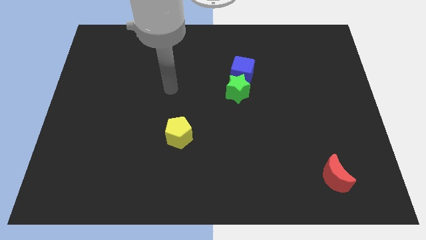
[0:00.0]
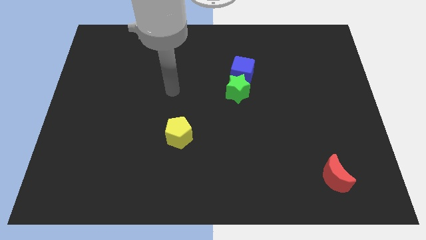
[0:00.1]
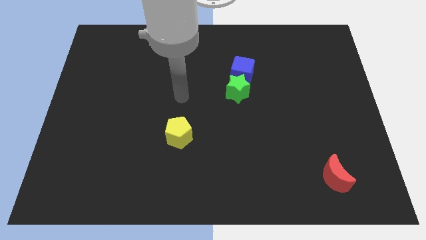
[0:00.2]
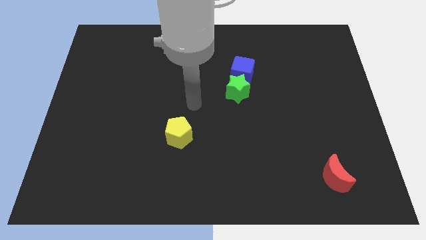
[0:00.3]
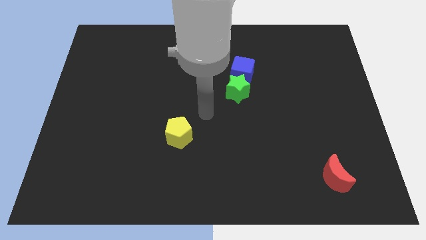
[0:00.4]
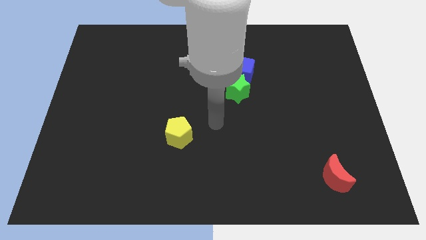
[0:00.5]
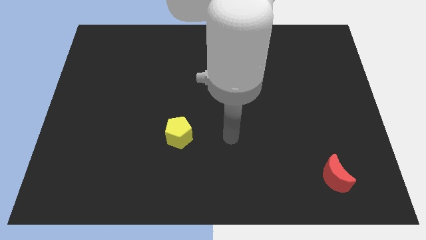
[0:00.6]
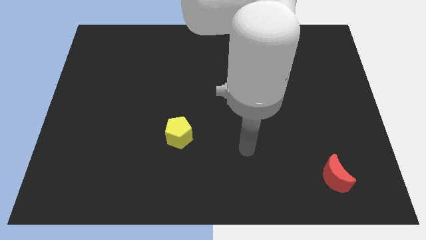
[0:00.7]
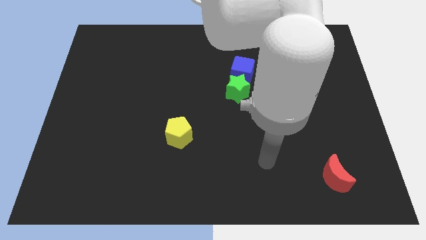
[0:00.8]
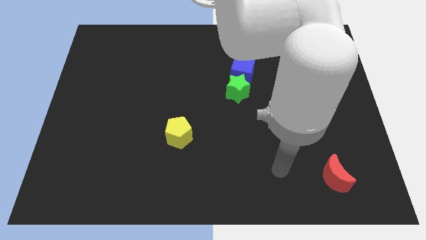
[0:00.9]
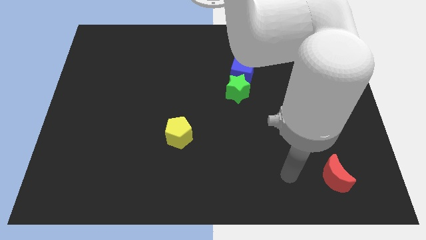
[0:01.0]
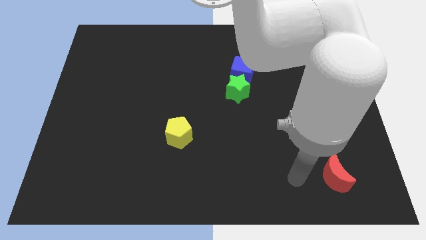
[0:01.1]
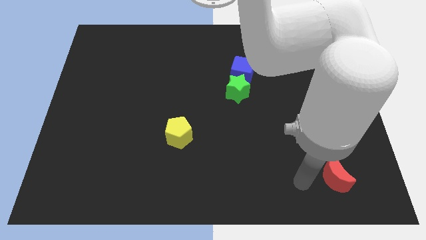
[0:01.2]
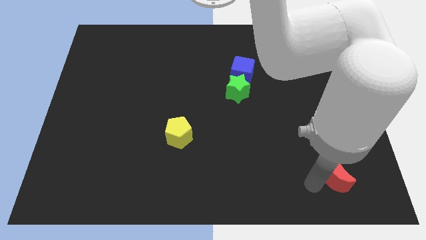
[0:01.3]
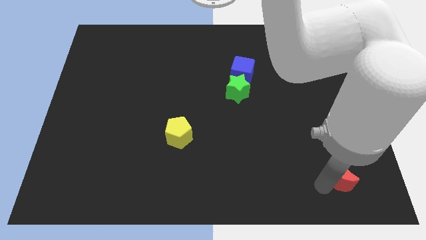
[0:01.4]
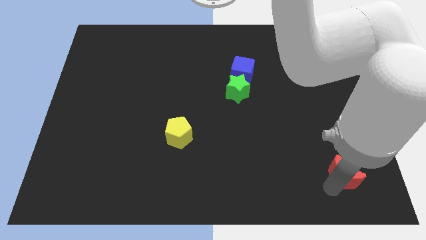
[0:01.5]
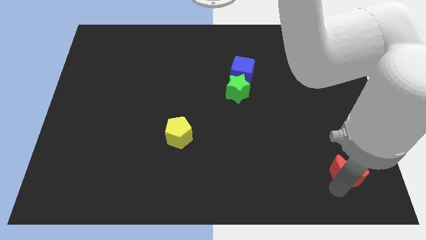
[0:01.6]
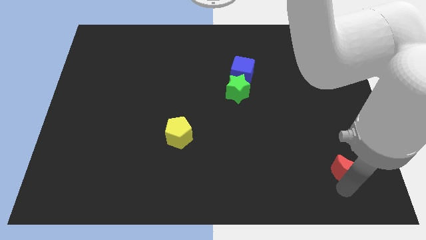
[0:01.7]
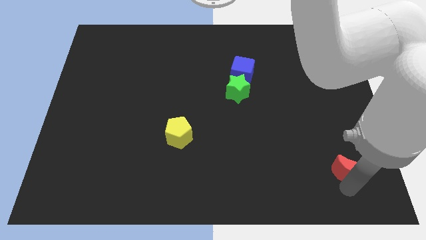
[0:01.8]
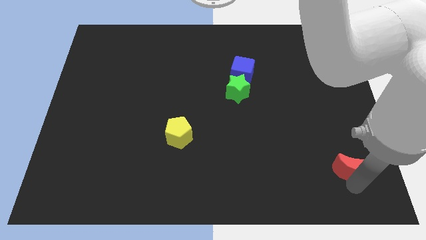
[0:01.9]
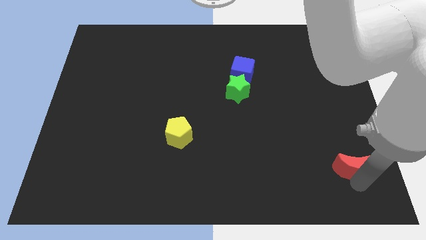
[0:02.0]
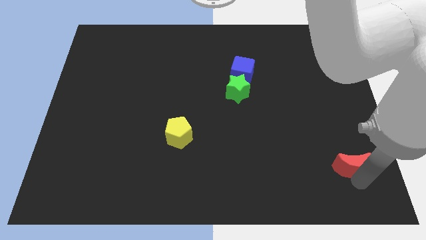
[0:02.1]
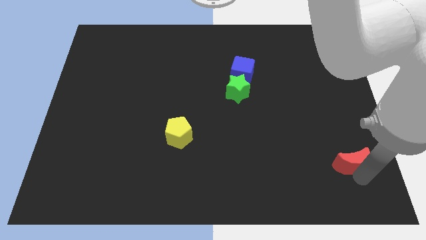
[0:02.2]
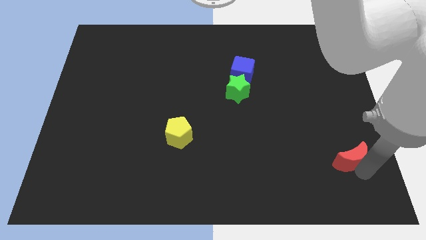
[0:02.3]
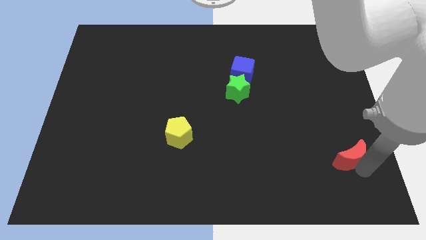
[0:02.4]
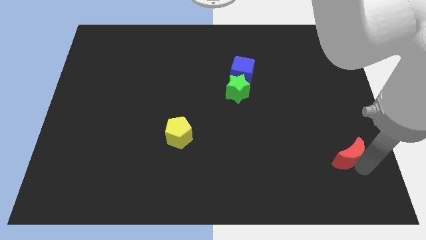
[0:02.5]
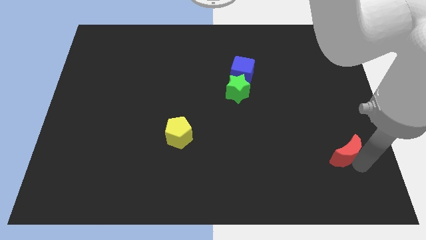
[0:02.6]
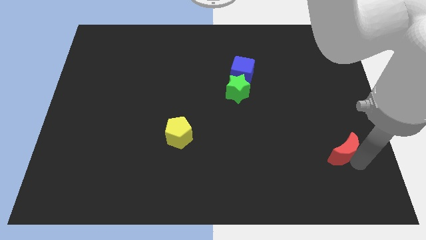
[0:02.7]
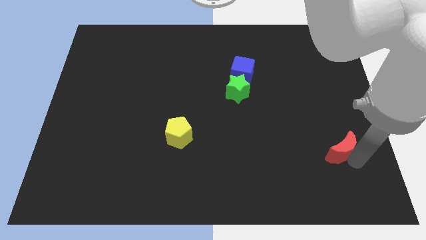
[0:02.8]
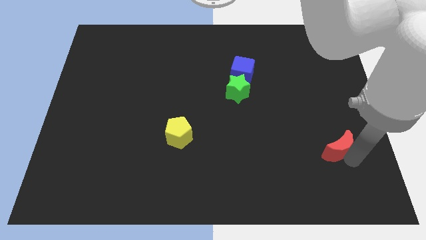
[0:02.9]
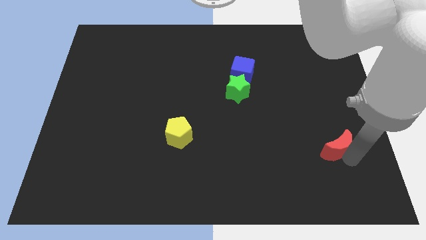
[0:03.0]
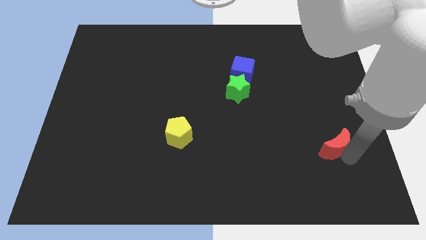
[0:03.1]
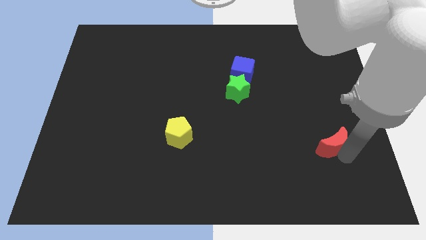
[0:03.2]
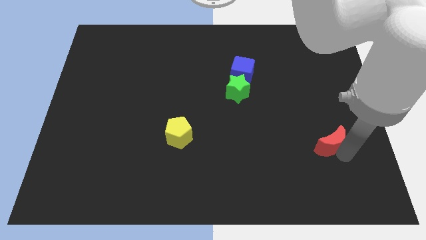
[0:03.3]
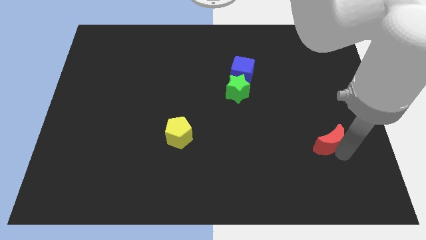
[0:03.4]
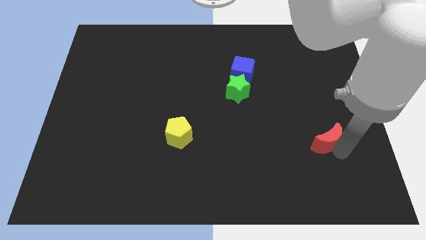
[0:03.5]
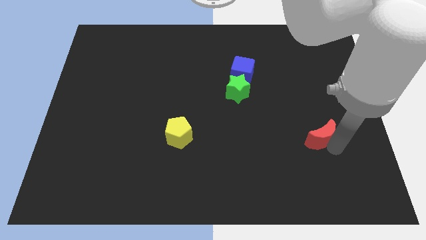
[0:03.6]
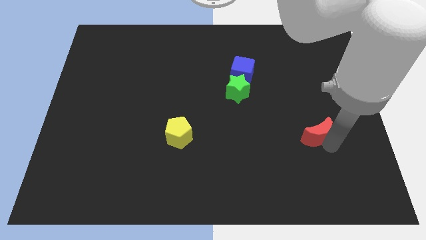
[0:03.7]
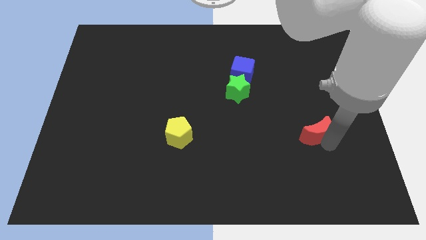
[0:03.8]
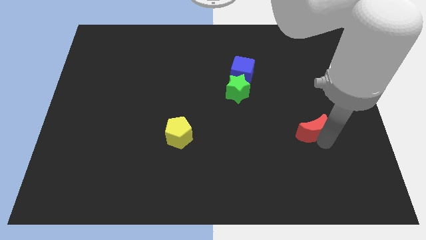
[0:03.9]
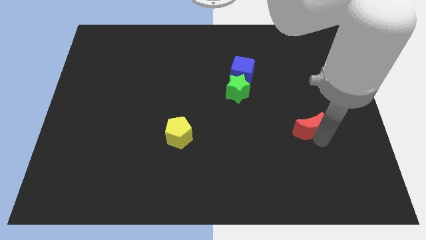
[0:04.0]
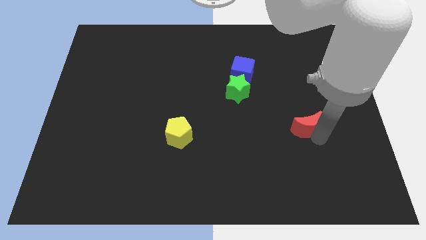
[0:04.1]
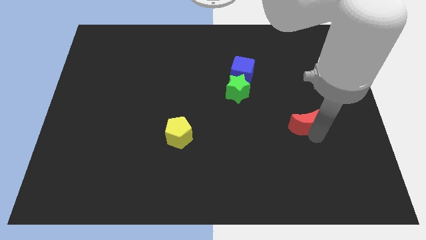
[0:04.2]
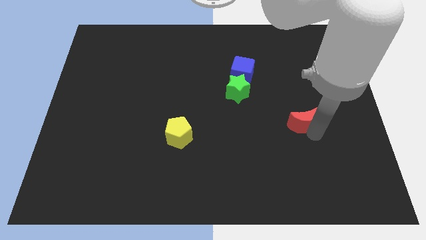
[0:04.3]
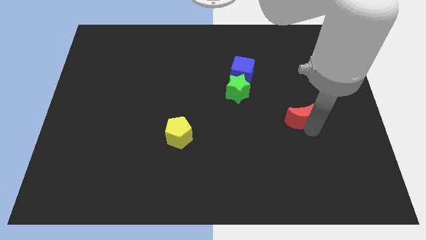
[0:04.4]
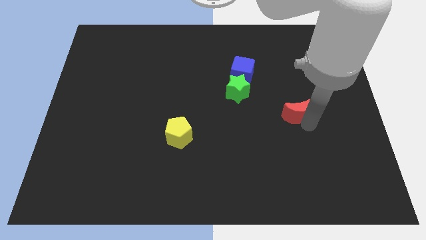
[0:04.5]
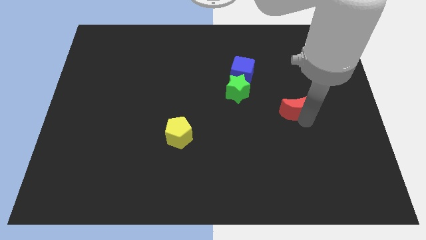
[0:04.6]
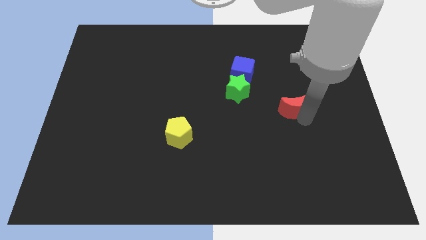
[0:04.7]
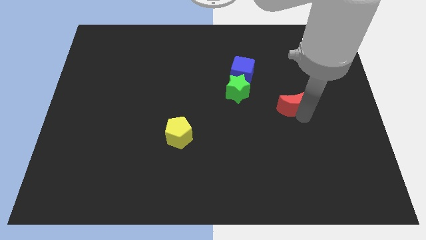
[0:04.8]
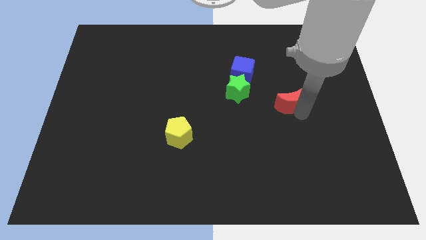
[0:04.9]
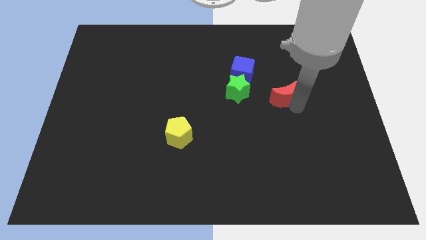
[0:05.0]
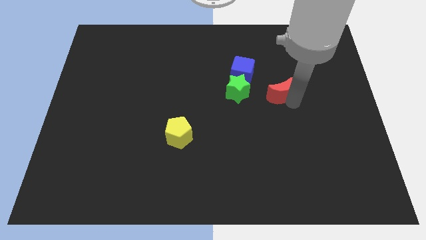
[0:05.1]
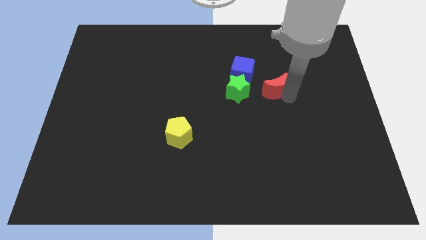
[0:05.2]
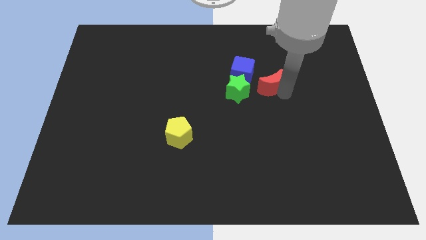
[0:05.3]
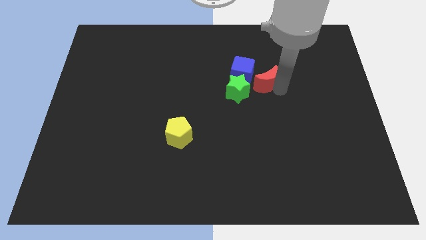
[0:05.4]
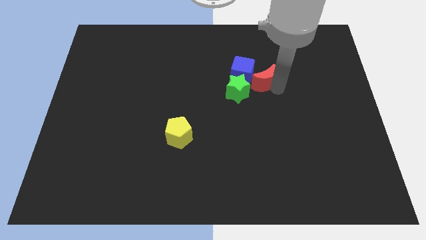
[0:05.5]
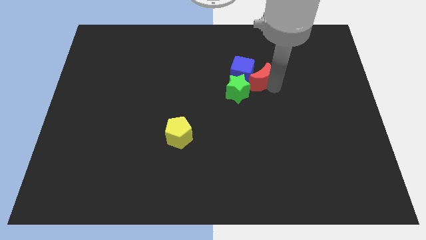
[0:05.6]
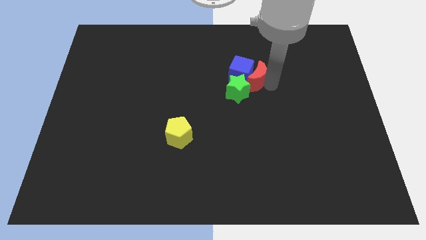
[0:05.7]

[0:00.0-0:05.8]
move the red moon towards the blue block

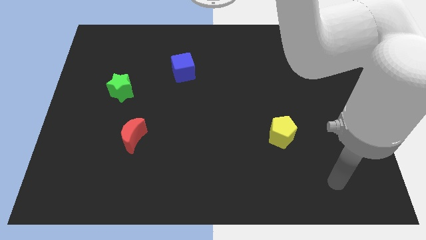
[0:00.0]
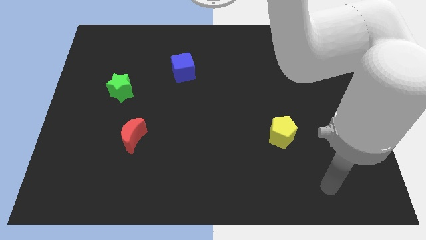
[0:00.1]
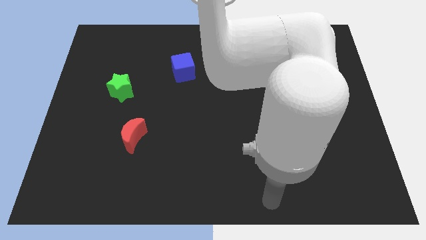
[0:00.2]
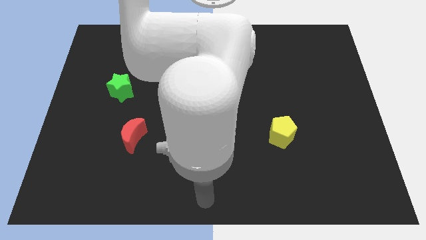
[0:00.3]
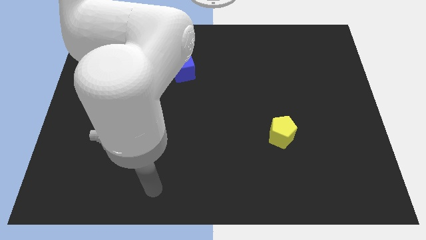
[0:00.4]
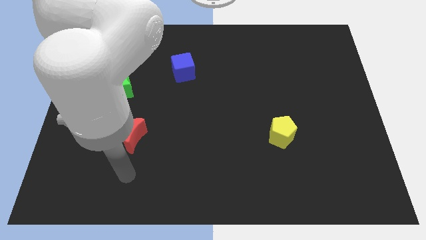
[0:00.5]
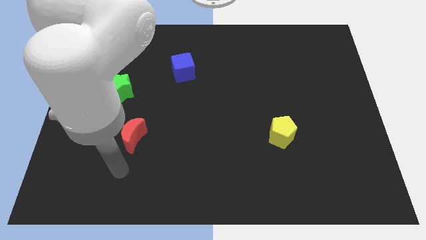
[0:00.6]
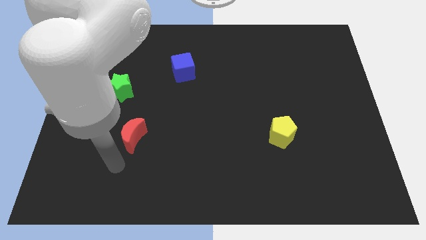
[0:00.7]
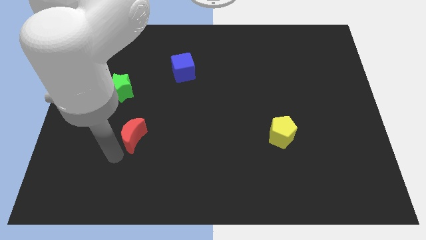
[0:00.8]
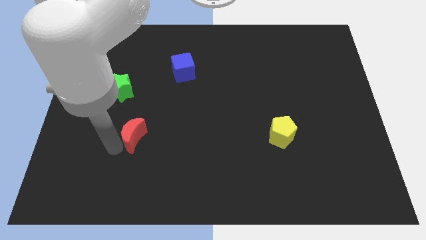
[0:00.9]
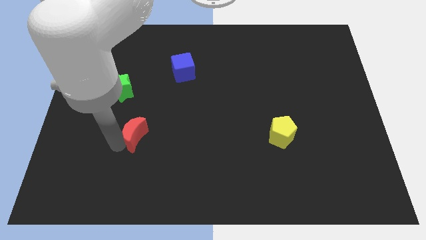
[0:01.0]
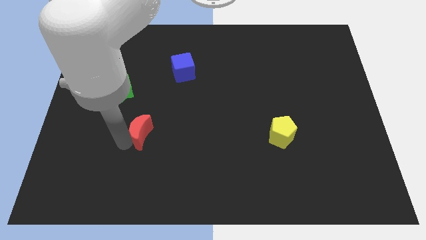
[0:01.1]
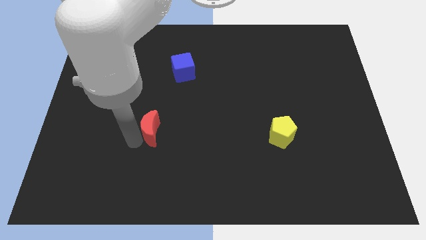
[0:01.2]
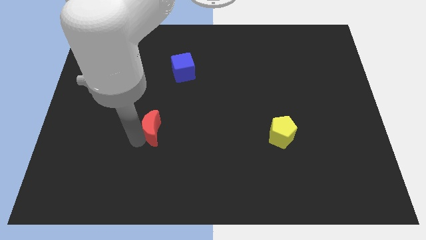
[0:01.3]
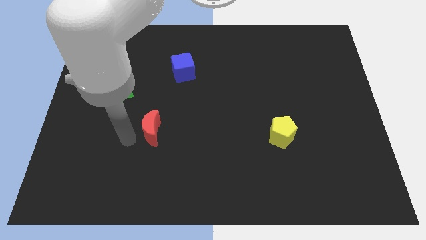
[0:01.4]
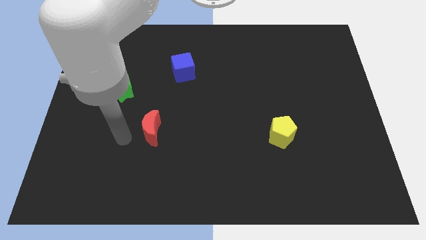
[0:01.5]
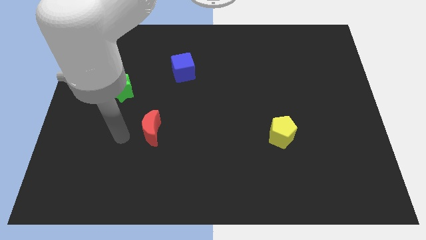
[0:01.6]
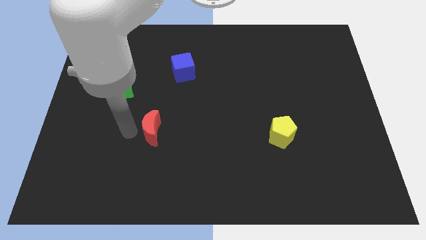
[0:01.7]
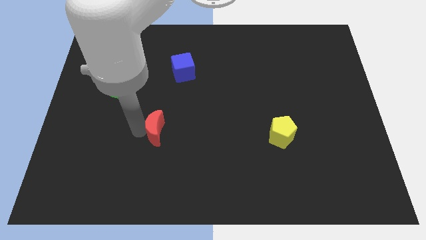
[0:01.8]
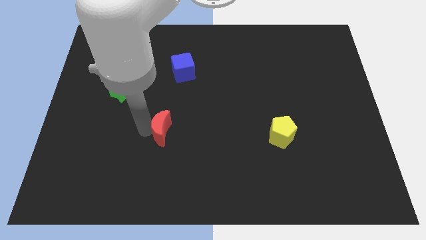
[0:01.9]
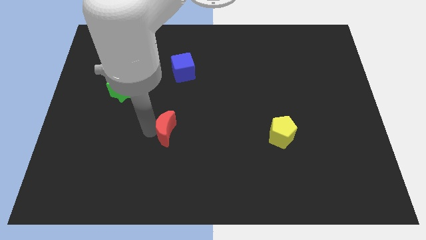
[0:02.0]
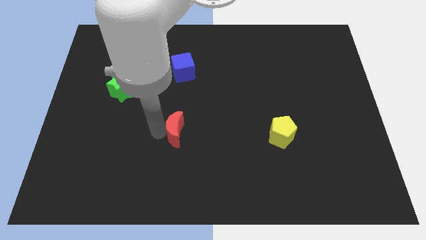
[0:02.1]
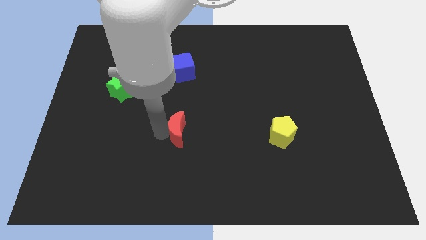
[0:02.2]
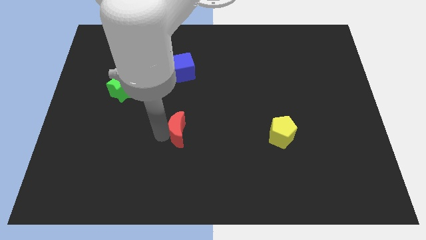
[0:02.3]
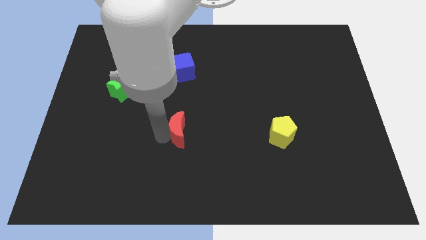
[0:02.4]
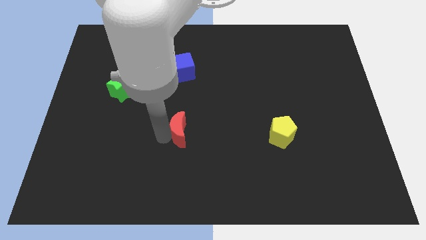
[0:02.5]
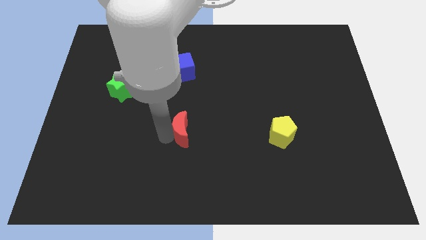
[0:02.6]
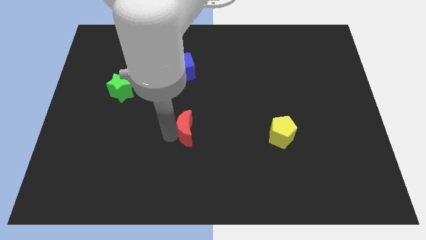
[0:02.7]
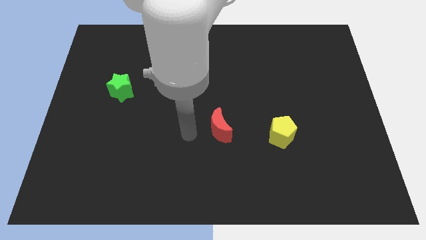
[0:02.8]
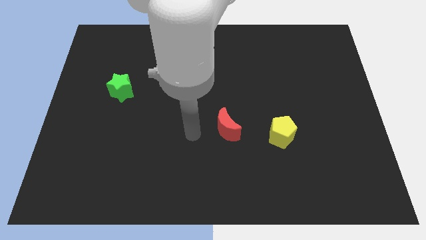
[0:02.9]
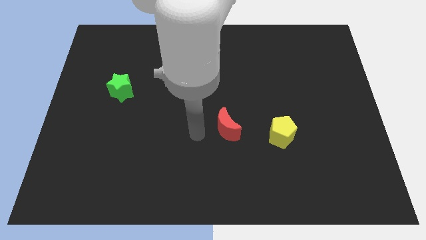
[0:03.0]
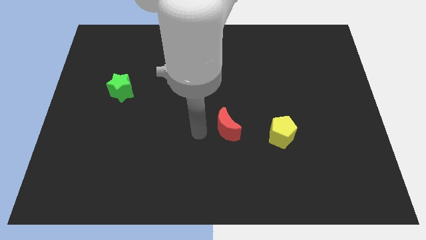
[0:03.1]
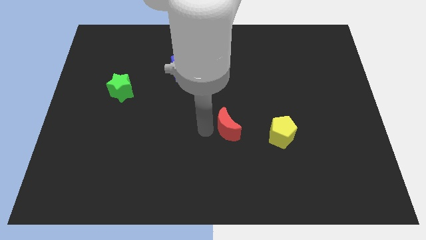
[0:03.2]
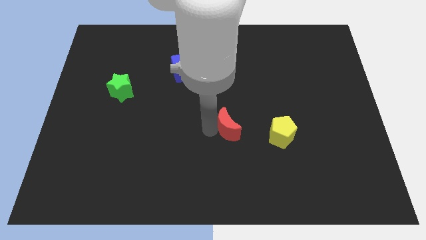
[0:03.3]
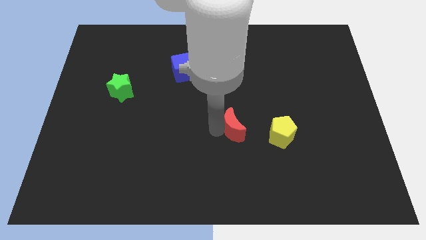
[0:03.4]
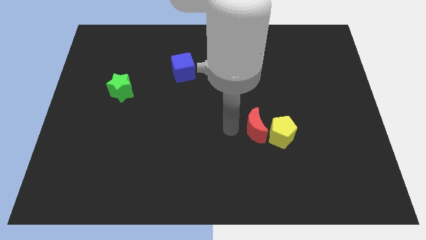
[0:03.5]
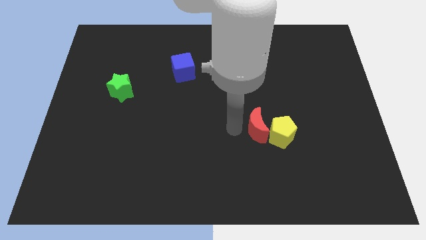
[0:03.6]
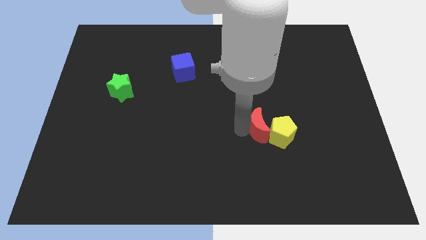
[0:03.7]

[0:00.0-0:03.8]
push the moon to the pentagon
